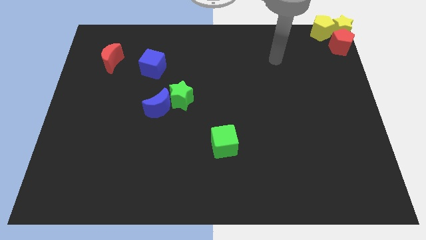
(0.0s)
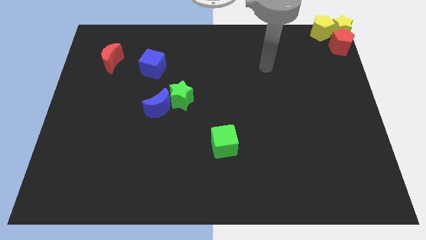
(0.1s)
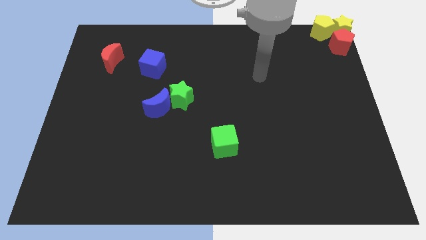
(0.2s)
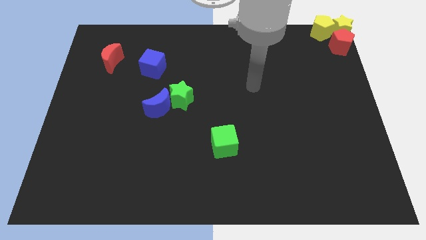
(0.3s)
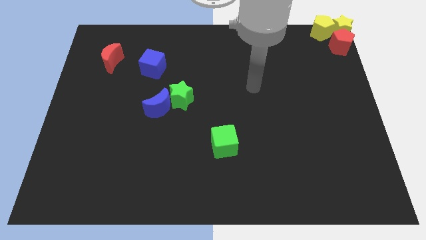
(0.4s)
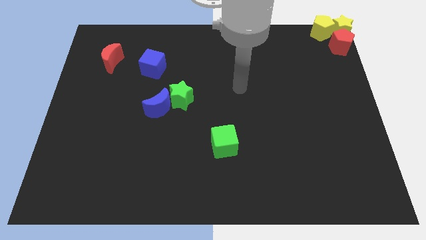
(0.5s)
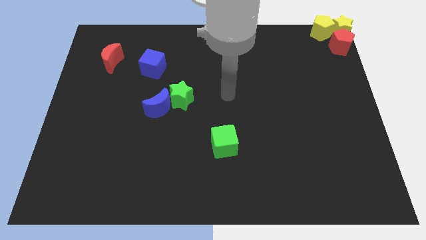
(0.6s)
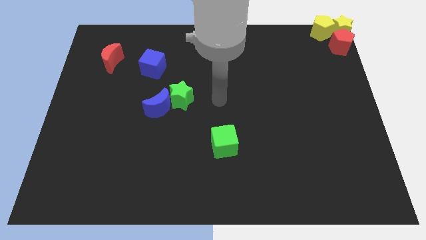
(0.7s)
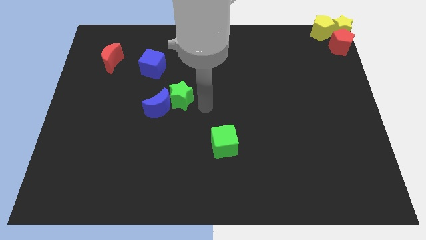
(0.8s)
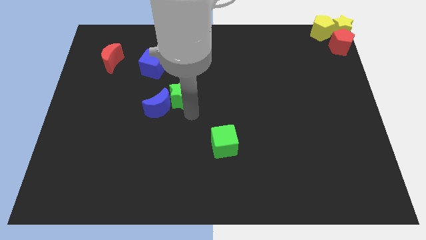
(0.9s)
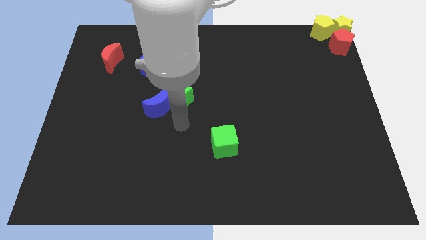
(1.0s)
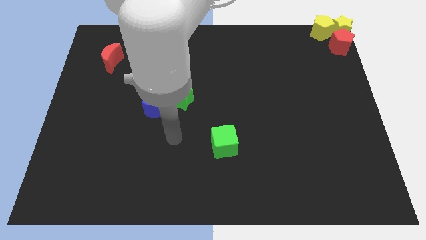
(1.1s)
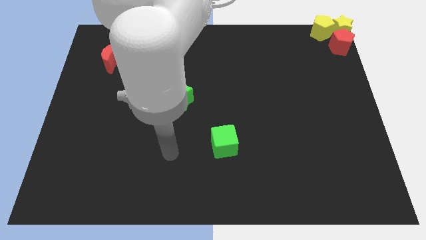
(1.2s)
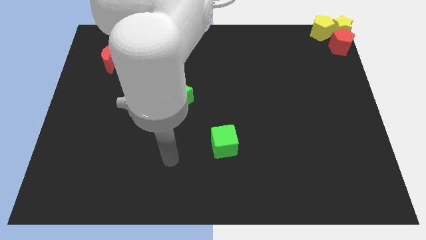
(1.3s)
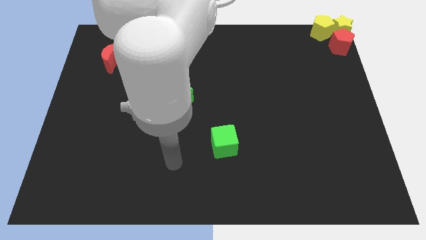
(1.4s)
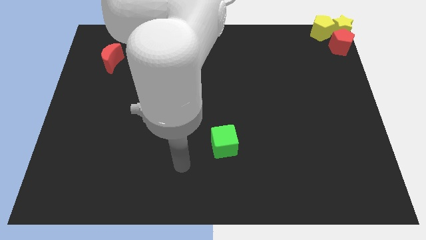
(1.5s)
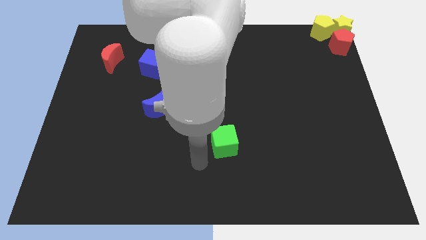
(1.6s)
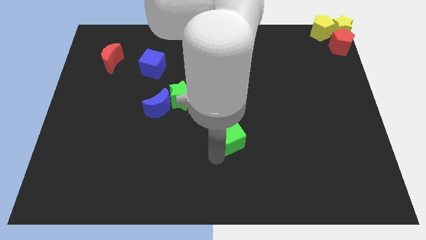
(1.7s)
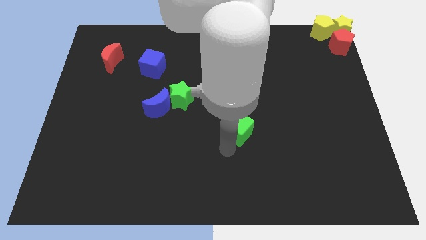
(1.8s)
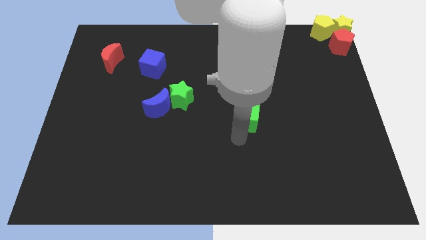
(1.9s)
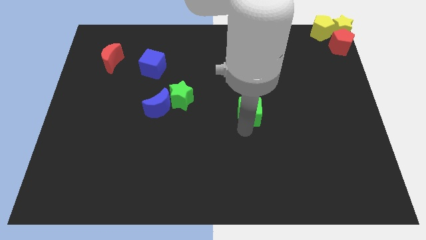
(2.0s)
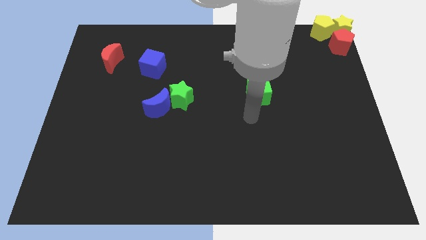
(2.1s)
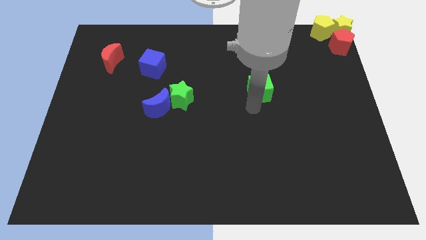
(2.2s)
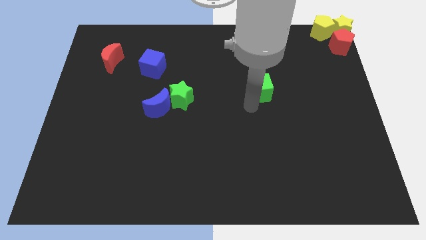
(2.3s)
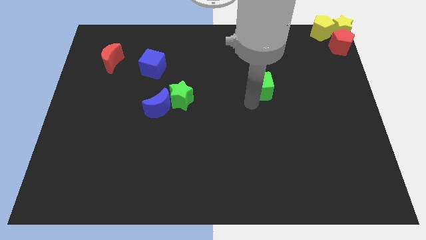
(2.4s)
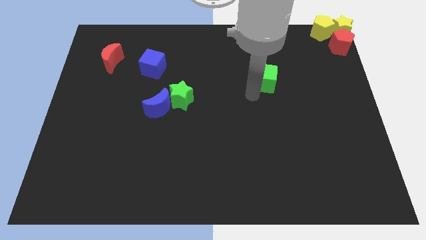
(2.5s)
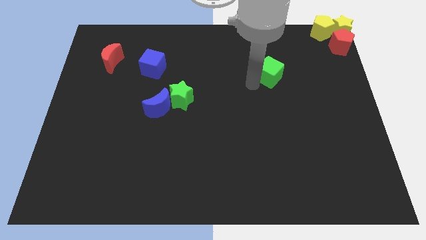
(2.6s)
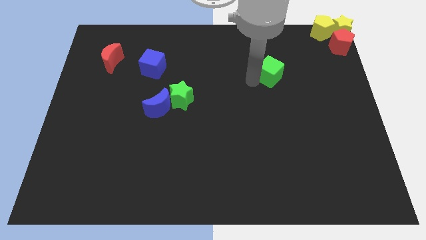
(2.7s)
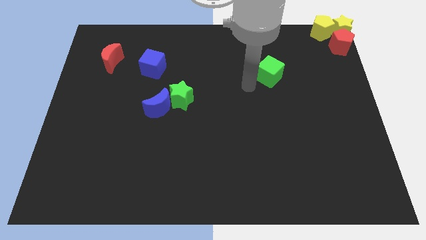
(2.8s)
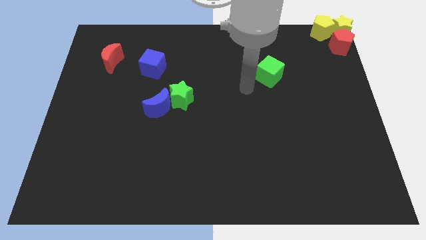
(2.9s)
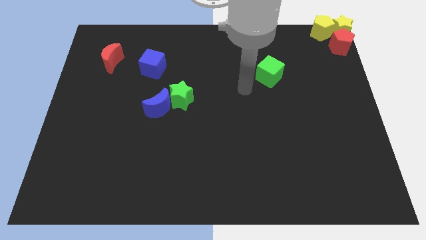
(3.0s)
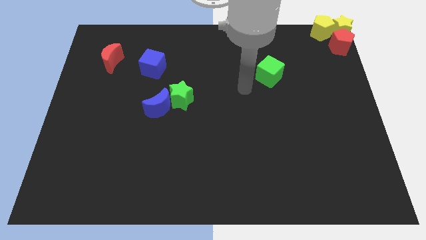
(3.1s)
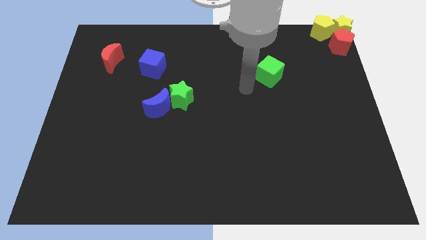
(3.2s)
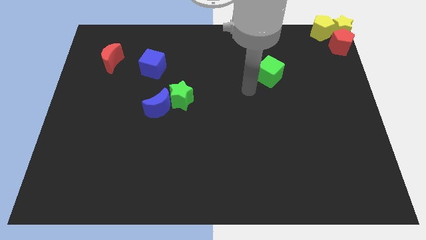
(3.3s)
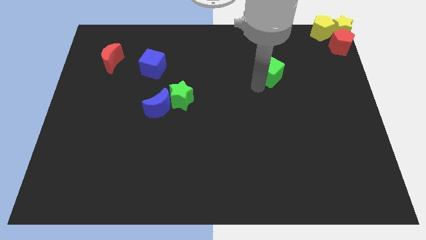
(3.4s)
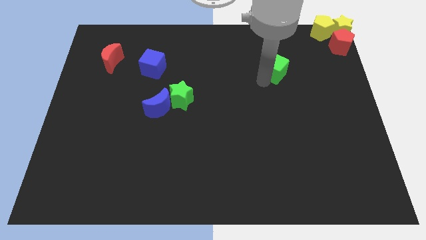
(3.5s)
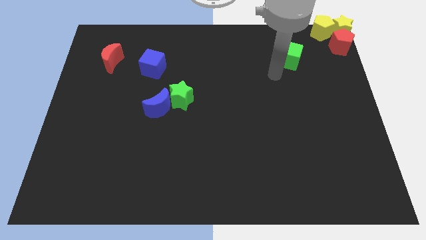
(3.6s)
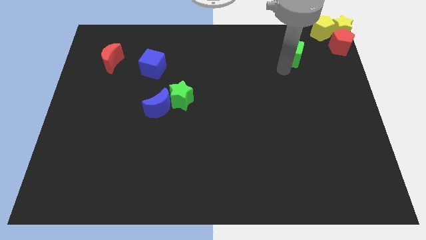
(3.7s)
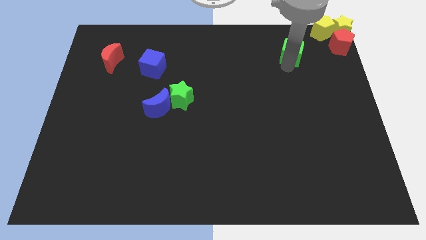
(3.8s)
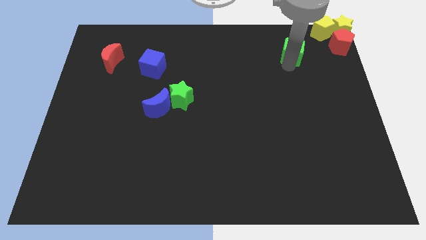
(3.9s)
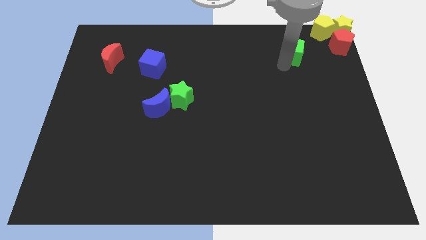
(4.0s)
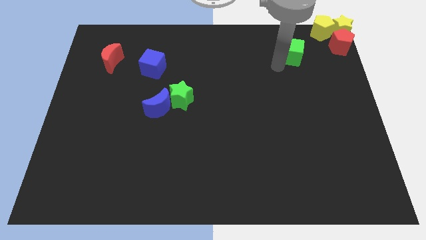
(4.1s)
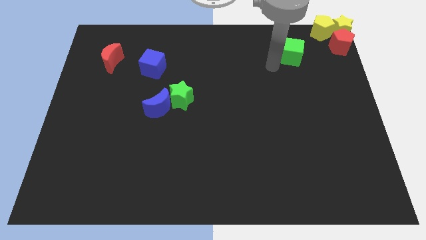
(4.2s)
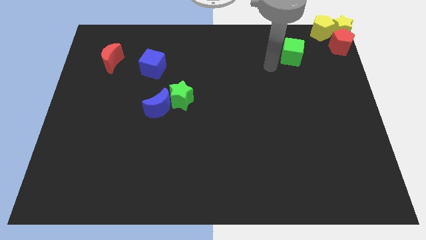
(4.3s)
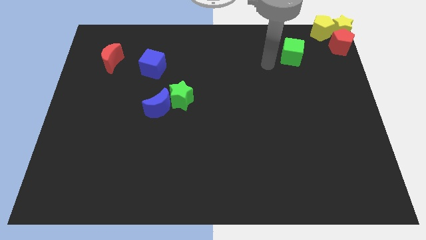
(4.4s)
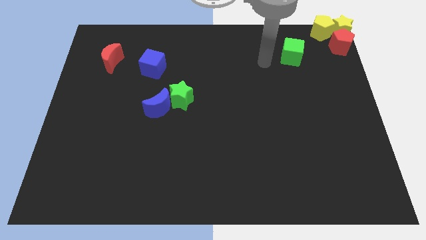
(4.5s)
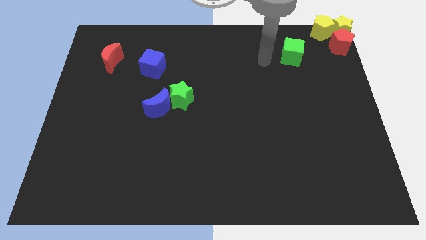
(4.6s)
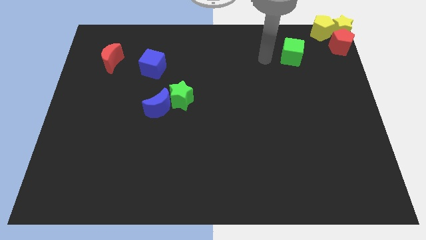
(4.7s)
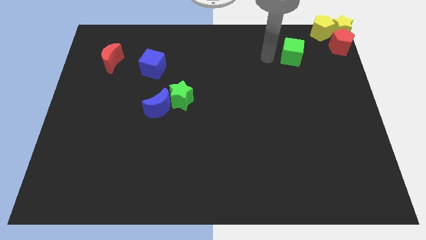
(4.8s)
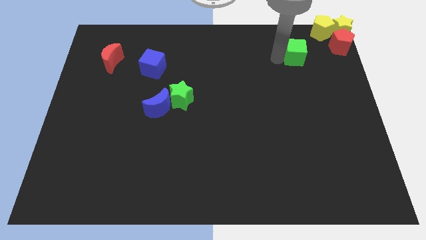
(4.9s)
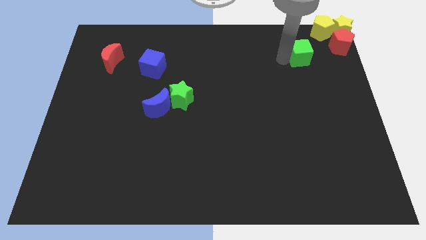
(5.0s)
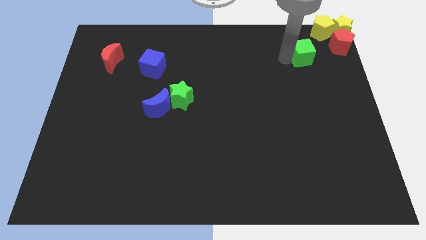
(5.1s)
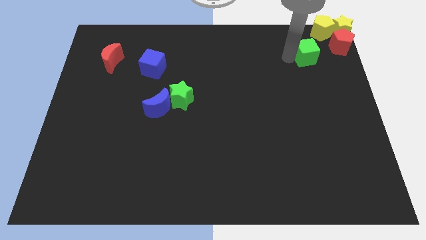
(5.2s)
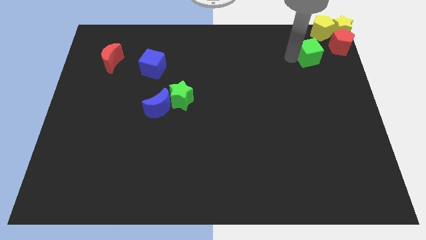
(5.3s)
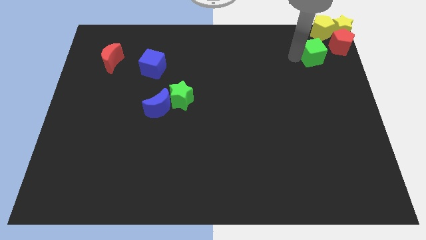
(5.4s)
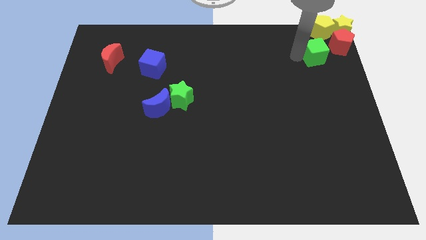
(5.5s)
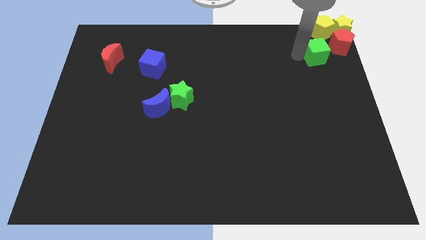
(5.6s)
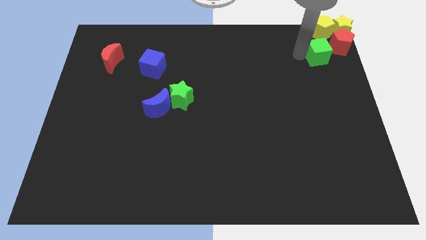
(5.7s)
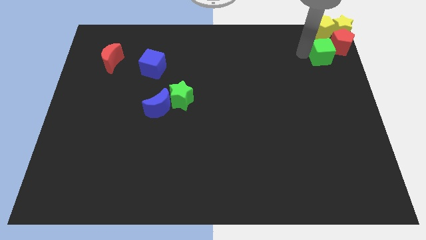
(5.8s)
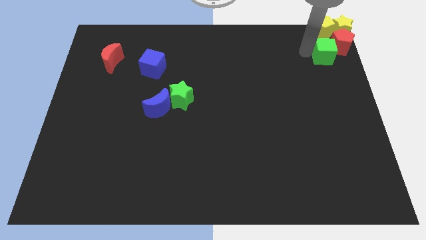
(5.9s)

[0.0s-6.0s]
place green cube below yellow pentagon

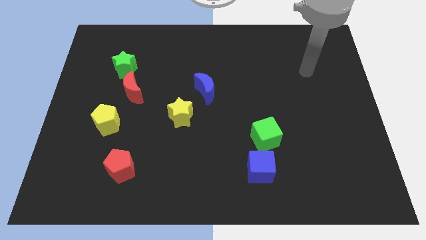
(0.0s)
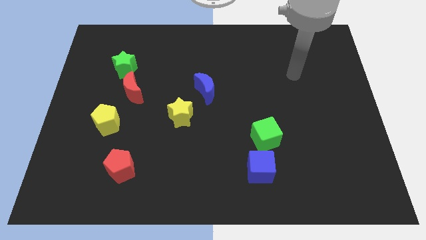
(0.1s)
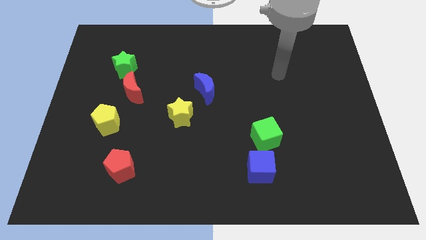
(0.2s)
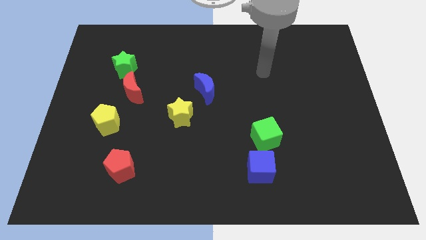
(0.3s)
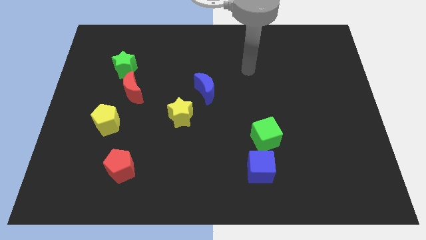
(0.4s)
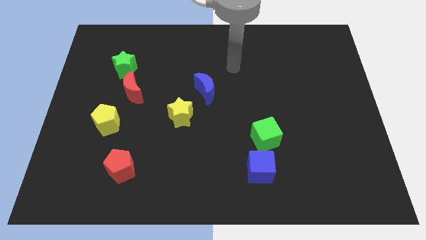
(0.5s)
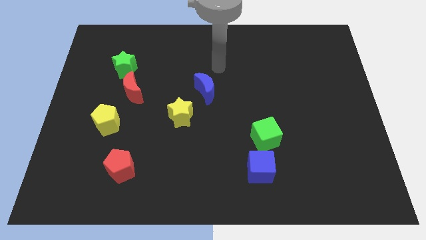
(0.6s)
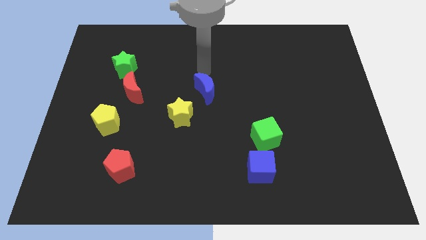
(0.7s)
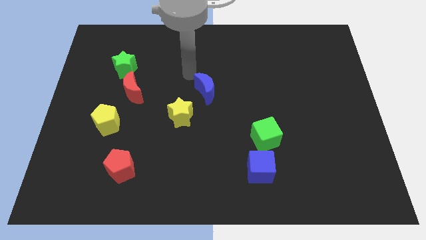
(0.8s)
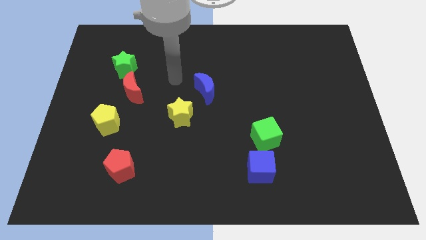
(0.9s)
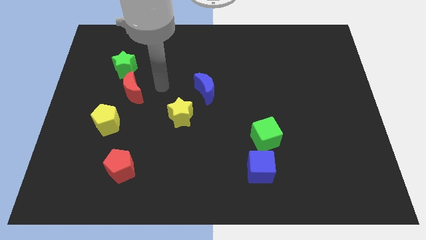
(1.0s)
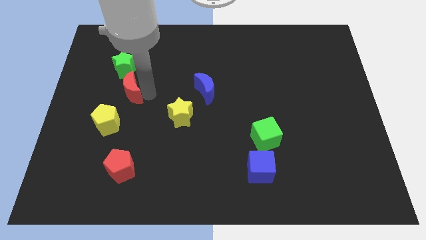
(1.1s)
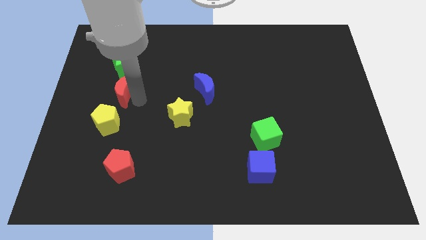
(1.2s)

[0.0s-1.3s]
touch the right side of the red crescent

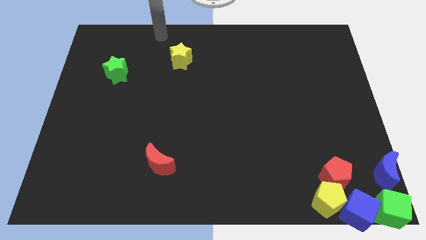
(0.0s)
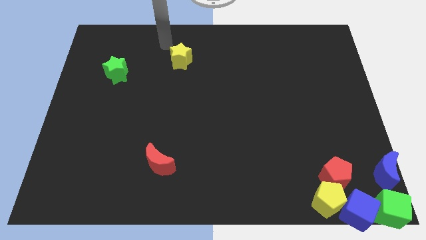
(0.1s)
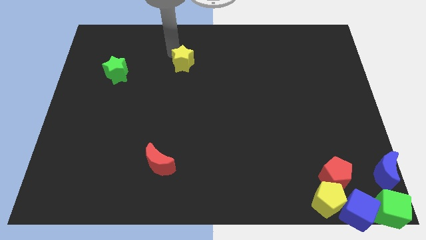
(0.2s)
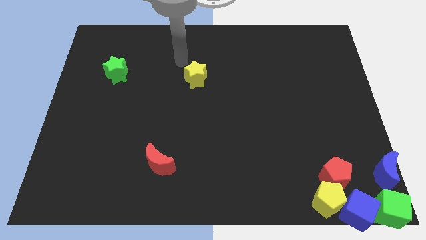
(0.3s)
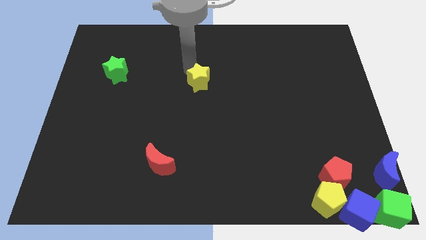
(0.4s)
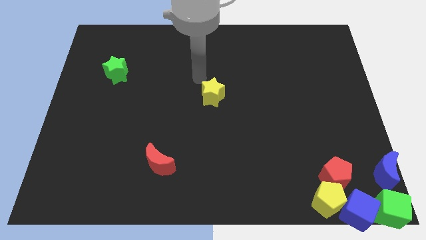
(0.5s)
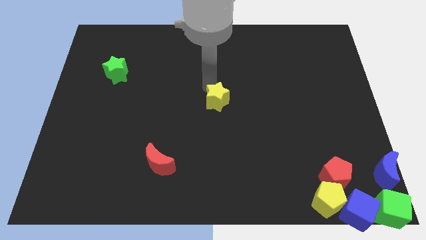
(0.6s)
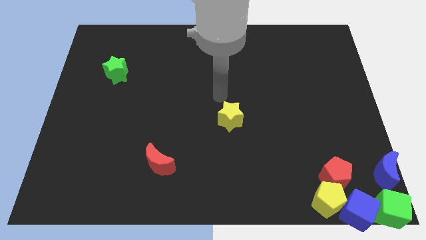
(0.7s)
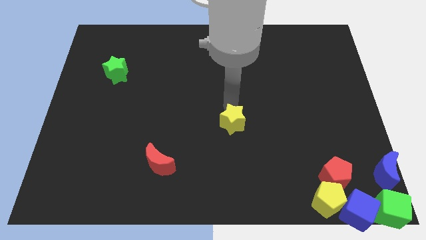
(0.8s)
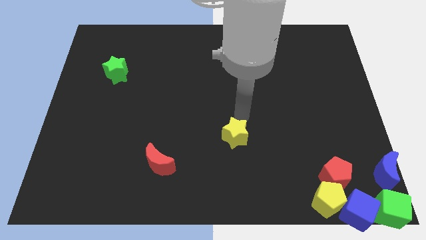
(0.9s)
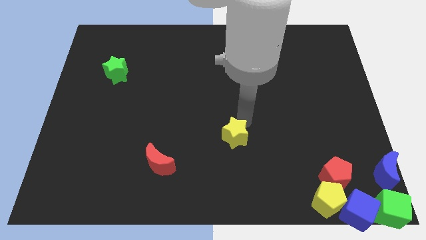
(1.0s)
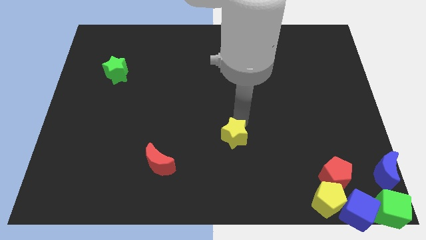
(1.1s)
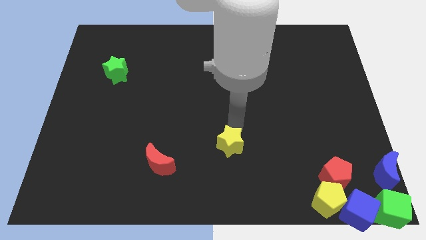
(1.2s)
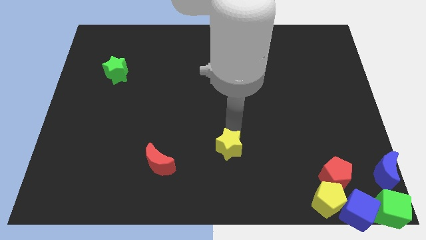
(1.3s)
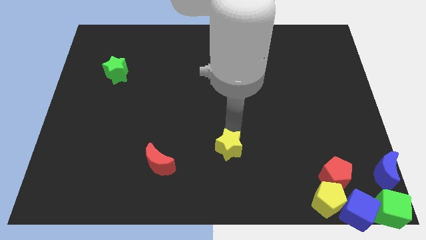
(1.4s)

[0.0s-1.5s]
push the yellow star to the center of the board

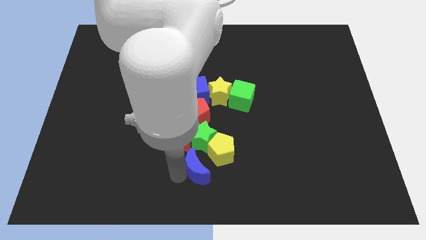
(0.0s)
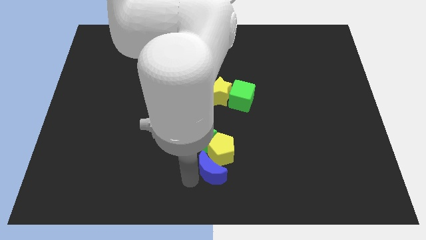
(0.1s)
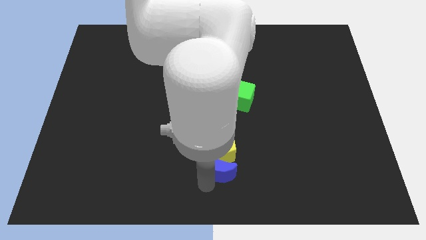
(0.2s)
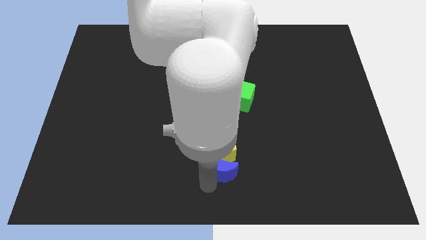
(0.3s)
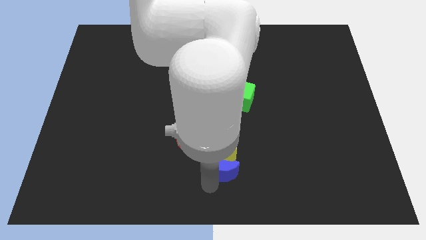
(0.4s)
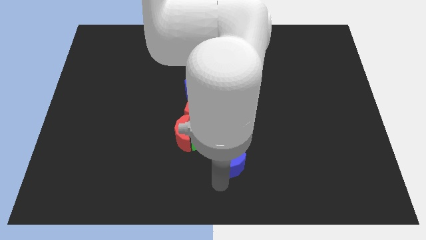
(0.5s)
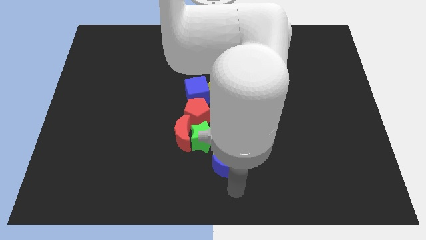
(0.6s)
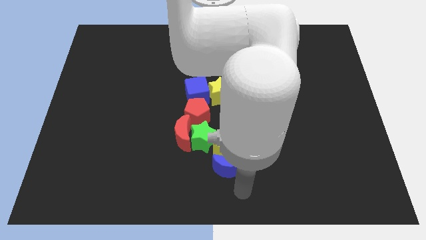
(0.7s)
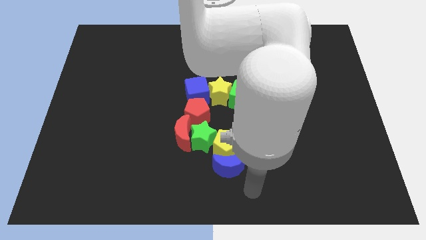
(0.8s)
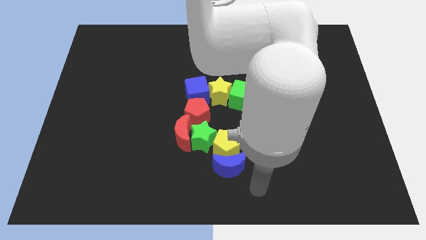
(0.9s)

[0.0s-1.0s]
place the blue crescent below the yellow pentagon
